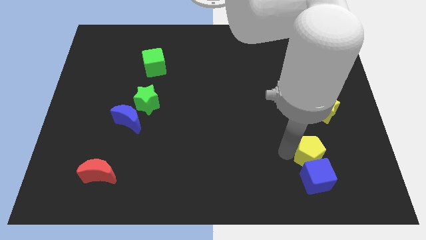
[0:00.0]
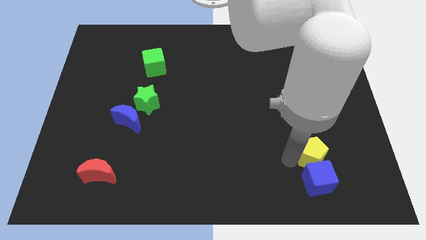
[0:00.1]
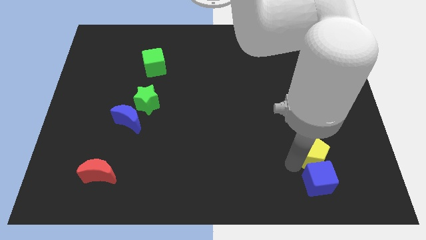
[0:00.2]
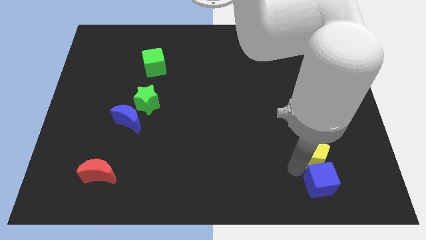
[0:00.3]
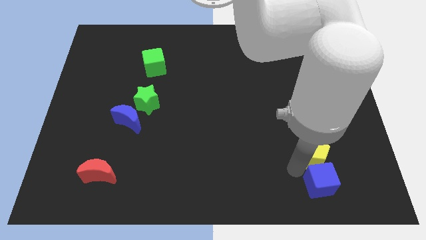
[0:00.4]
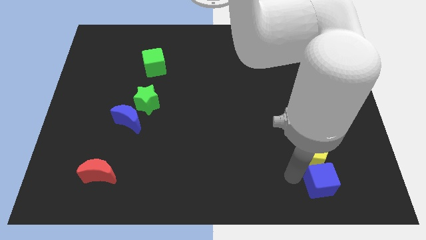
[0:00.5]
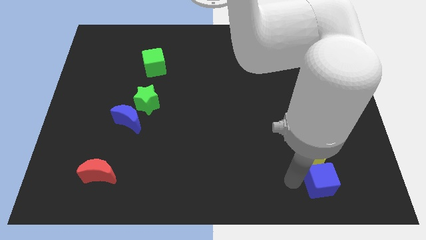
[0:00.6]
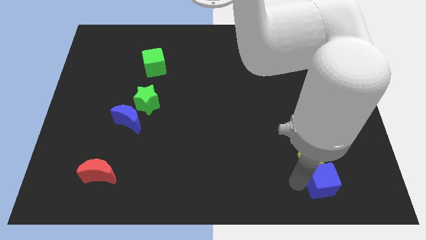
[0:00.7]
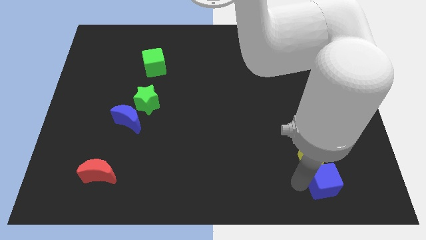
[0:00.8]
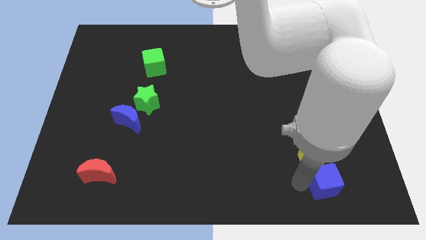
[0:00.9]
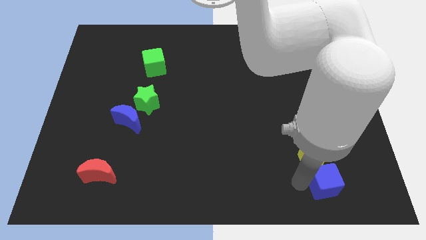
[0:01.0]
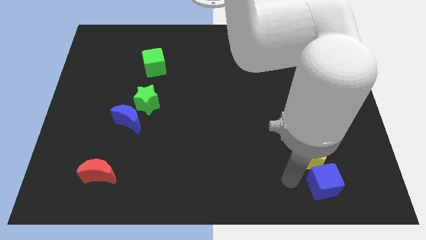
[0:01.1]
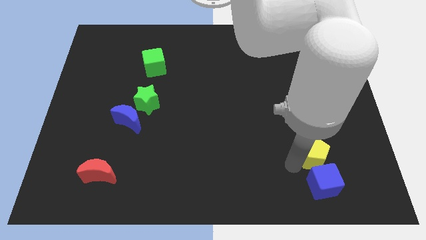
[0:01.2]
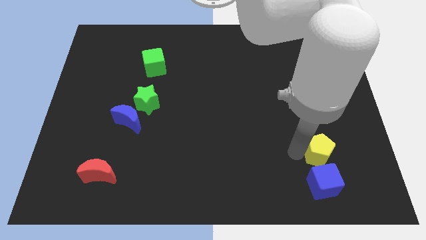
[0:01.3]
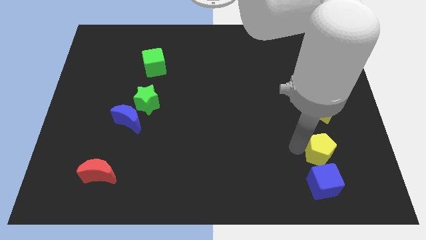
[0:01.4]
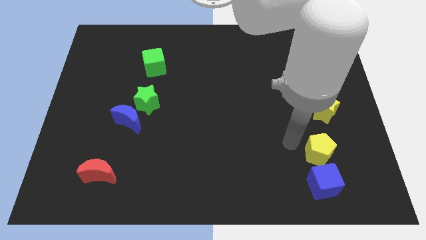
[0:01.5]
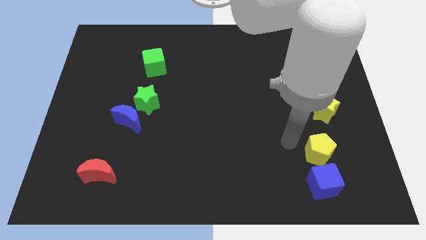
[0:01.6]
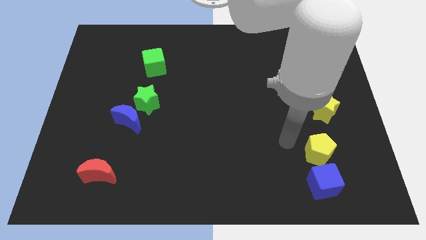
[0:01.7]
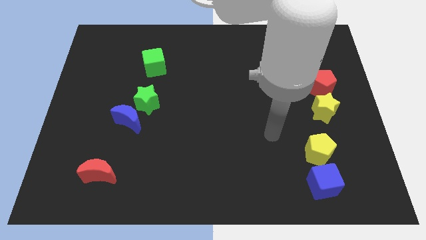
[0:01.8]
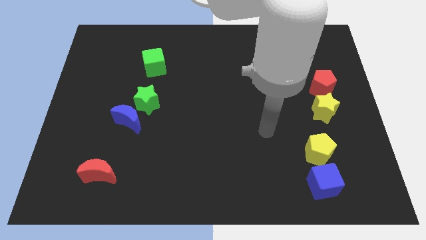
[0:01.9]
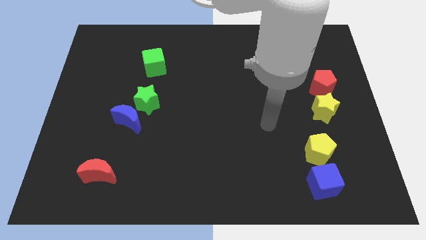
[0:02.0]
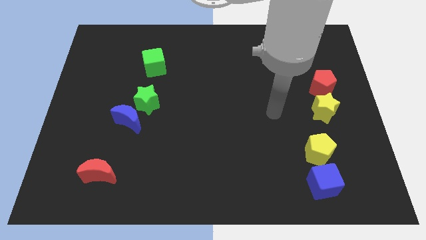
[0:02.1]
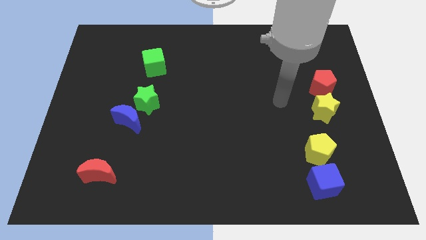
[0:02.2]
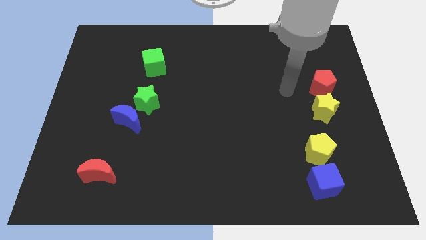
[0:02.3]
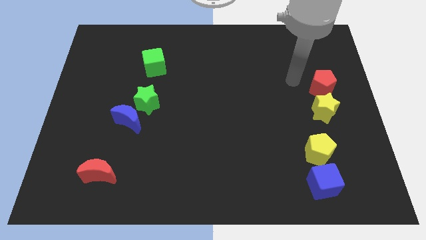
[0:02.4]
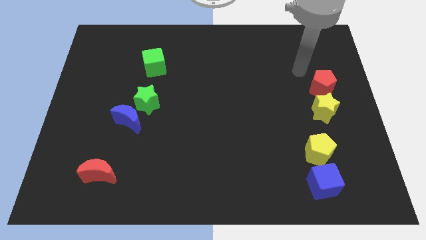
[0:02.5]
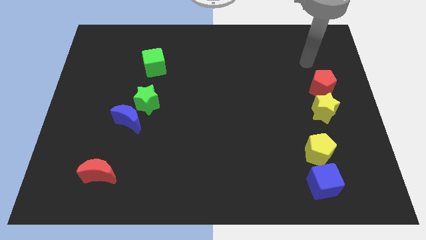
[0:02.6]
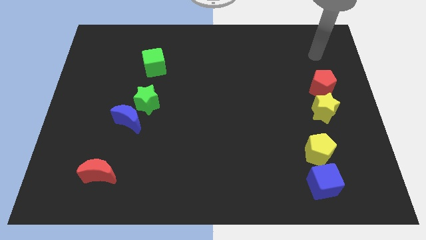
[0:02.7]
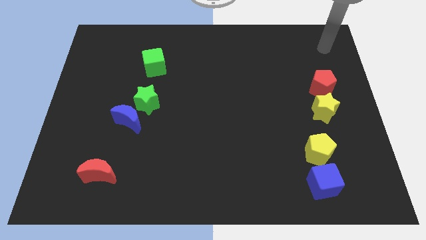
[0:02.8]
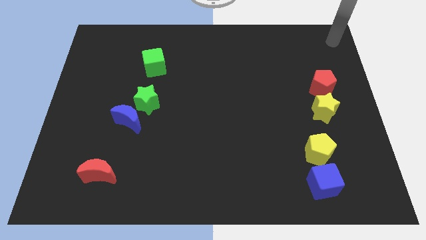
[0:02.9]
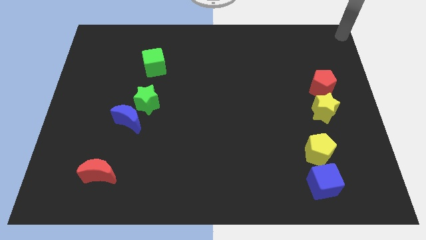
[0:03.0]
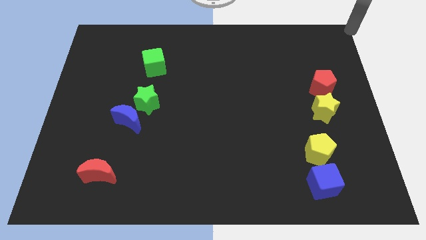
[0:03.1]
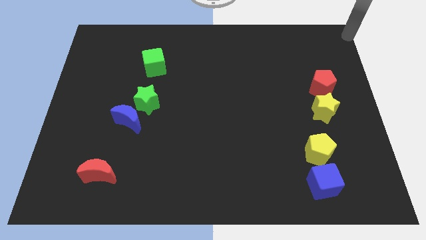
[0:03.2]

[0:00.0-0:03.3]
place the arm on the top right corner of the board

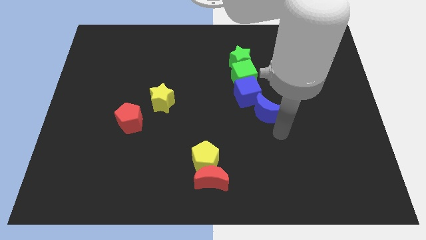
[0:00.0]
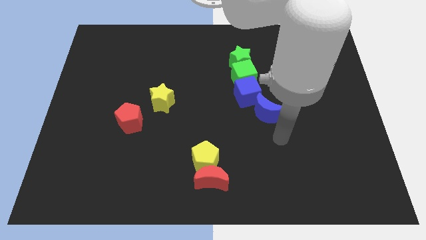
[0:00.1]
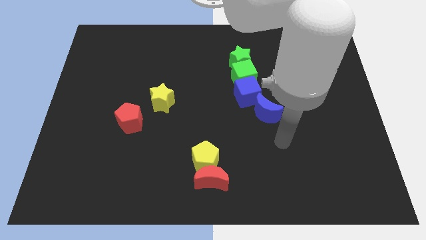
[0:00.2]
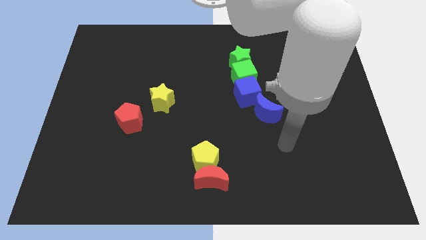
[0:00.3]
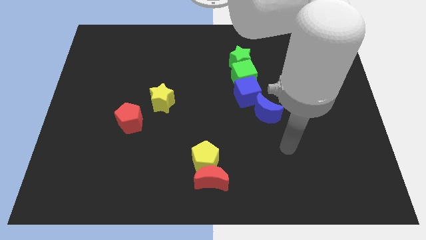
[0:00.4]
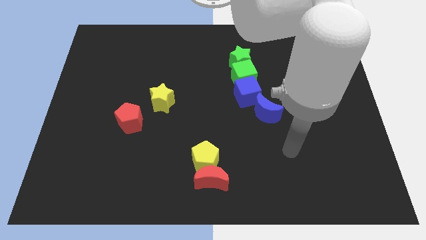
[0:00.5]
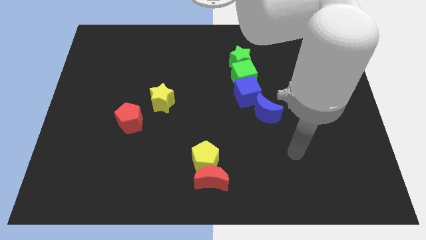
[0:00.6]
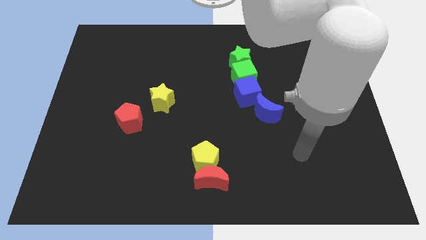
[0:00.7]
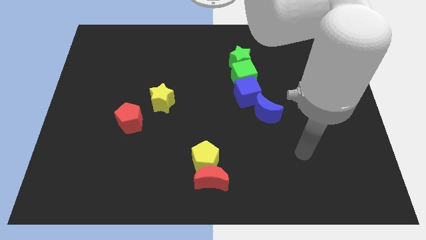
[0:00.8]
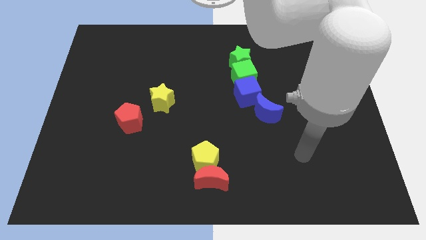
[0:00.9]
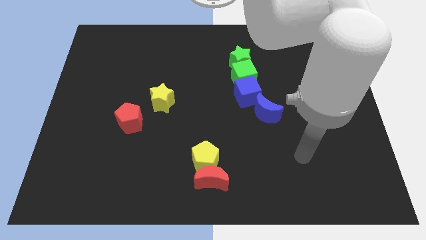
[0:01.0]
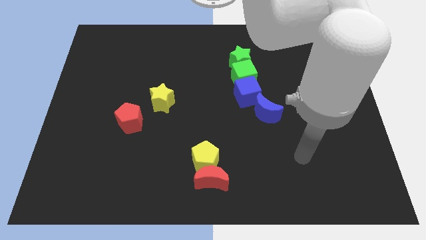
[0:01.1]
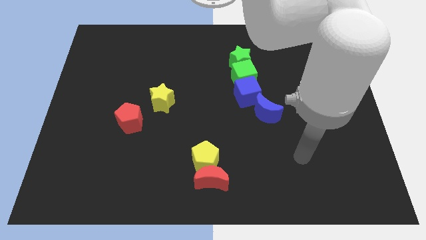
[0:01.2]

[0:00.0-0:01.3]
move your arm away from the blue moon

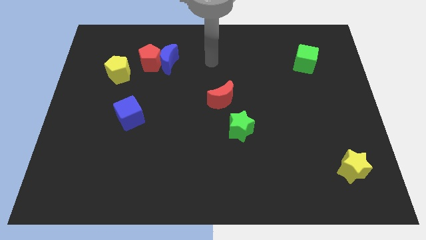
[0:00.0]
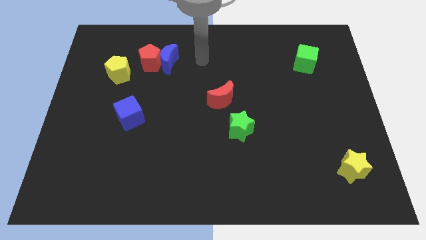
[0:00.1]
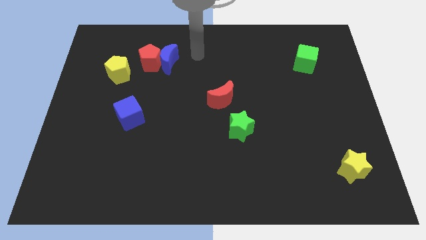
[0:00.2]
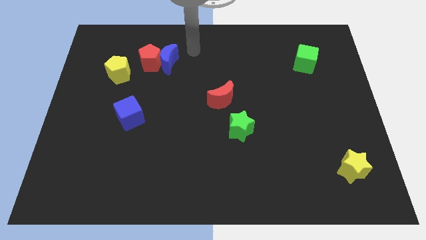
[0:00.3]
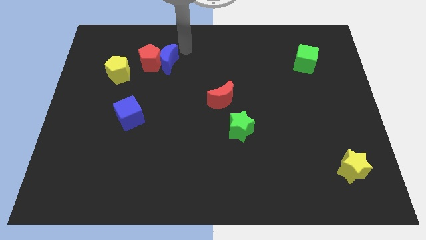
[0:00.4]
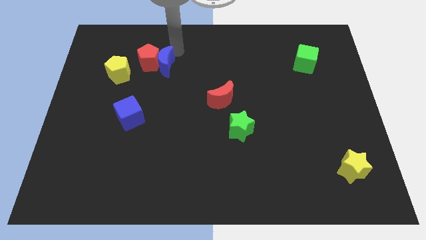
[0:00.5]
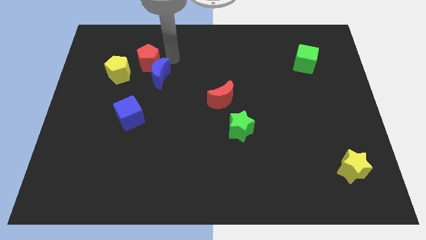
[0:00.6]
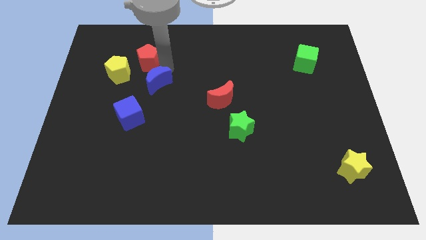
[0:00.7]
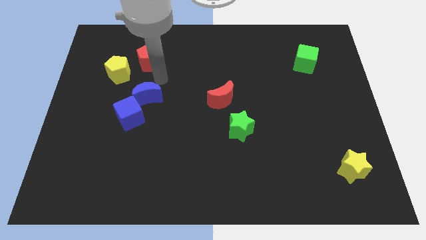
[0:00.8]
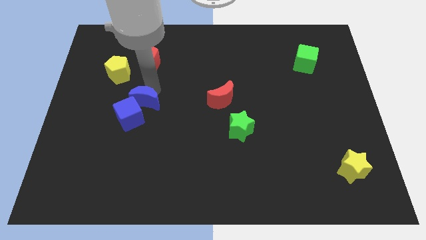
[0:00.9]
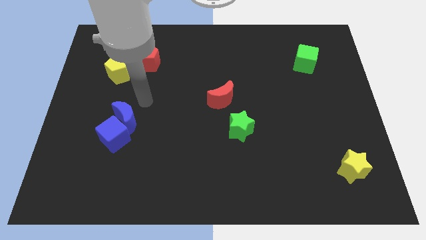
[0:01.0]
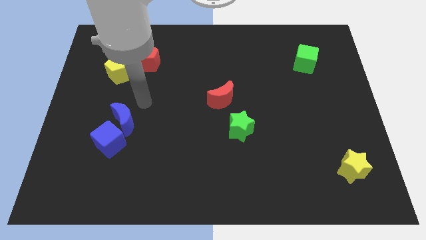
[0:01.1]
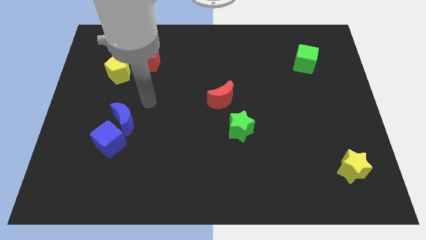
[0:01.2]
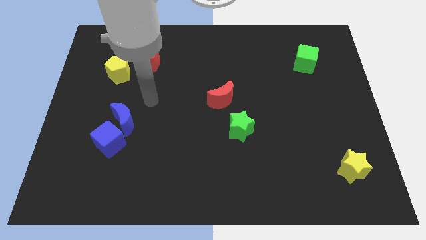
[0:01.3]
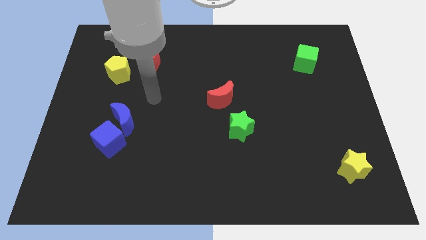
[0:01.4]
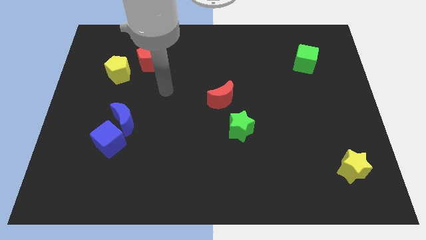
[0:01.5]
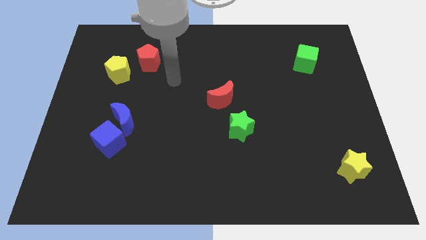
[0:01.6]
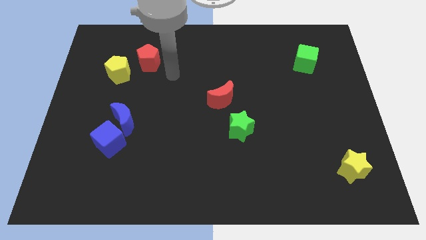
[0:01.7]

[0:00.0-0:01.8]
move the blue blocks towards the bottom left

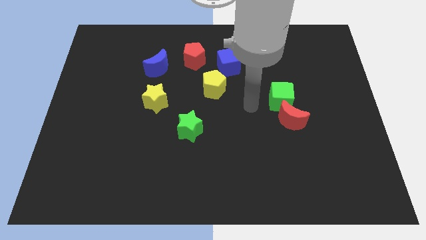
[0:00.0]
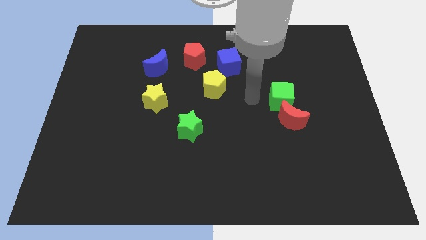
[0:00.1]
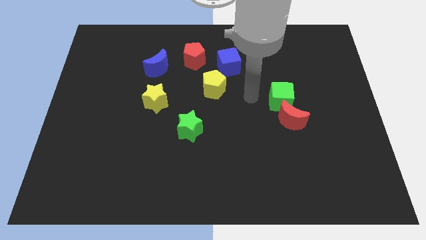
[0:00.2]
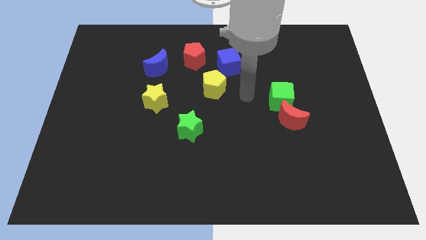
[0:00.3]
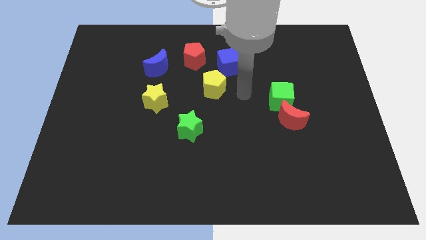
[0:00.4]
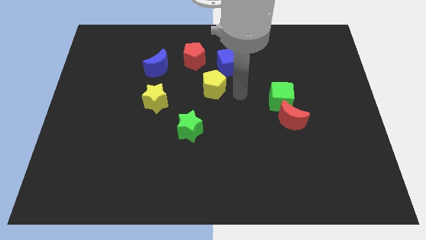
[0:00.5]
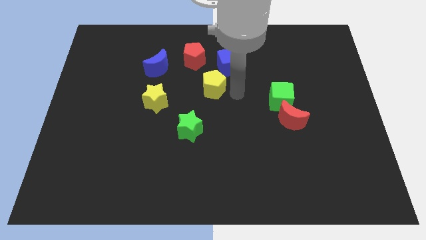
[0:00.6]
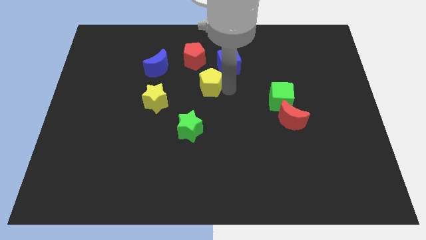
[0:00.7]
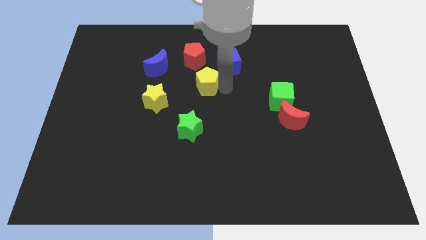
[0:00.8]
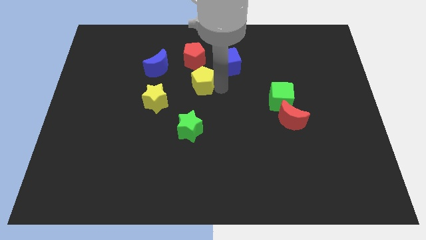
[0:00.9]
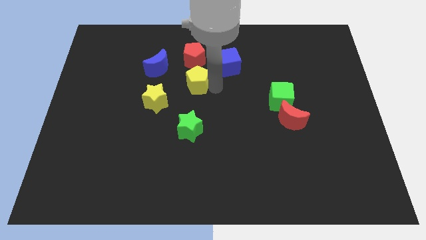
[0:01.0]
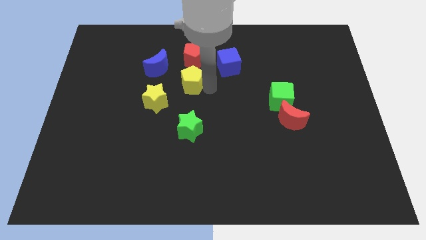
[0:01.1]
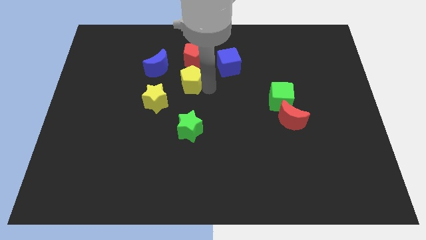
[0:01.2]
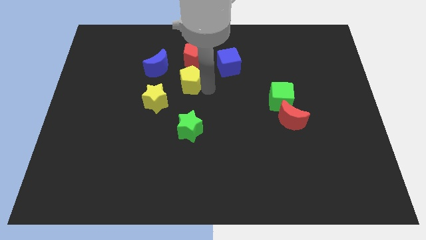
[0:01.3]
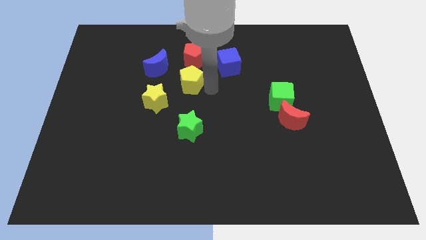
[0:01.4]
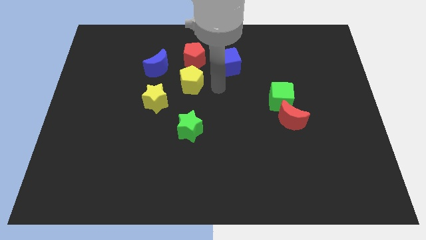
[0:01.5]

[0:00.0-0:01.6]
place the yellow pentagon below the red pentagon

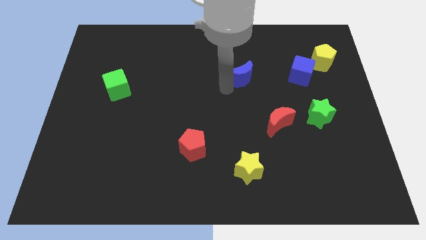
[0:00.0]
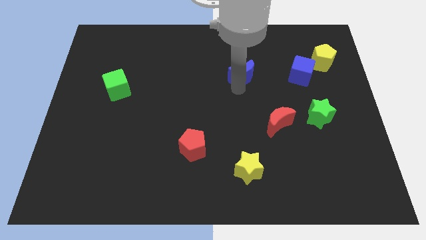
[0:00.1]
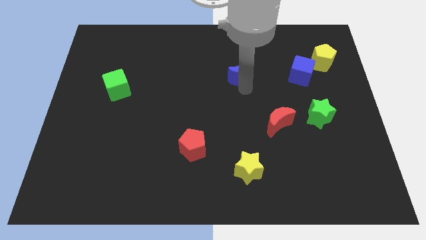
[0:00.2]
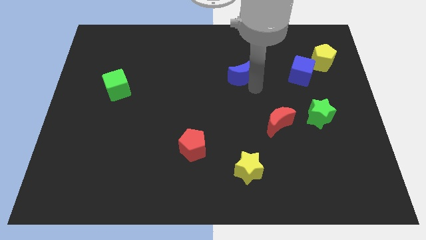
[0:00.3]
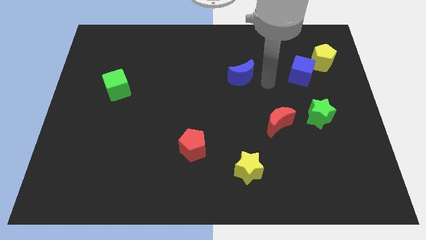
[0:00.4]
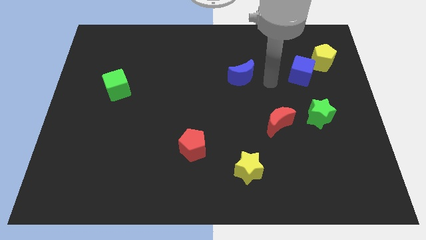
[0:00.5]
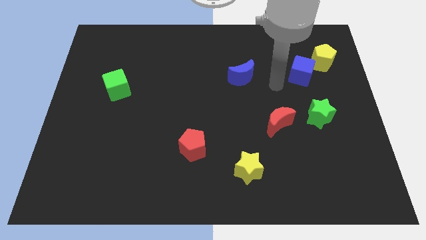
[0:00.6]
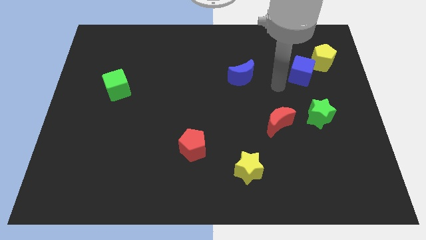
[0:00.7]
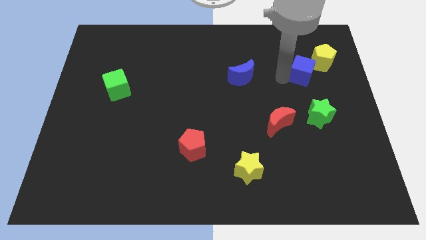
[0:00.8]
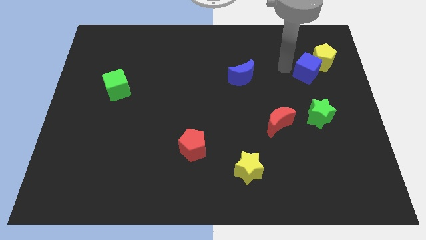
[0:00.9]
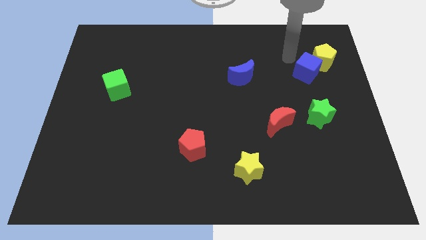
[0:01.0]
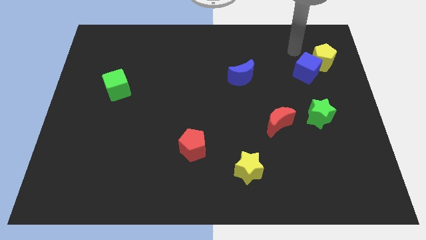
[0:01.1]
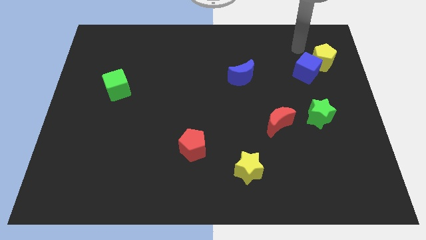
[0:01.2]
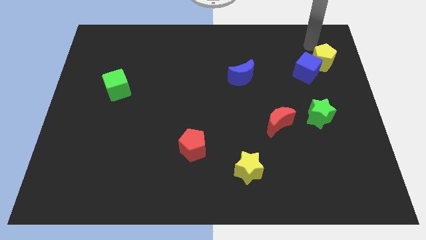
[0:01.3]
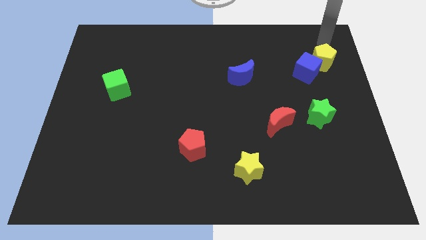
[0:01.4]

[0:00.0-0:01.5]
push the blue cube at the bottom left side of the yellow pentagon
